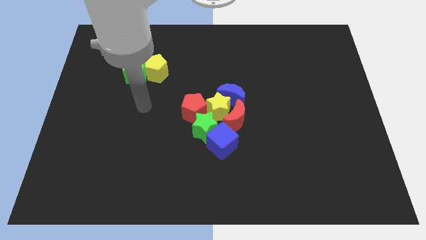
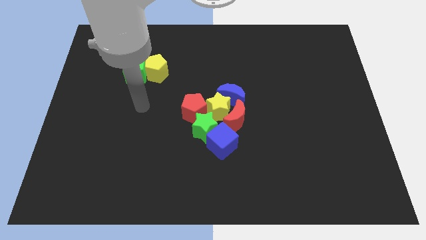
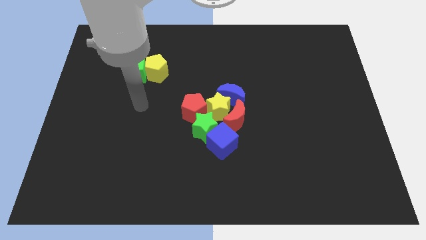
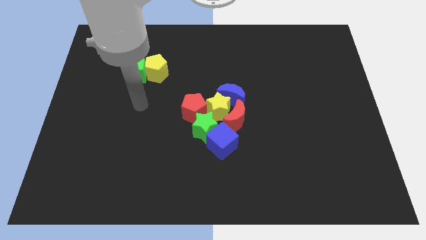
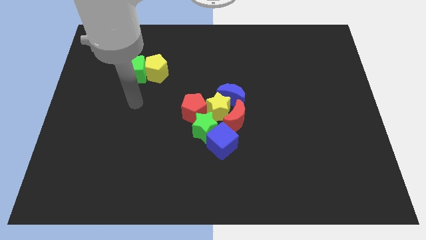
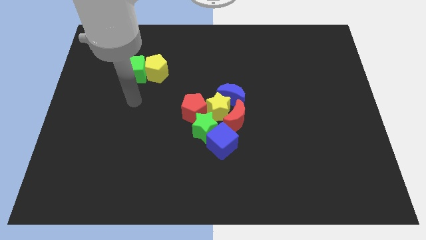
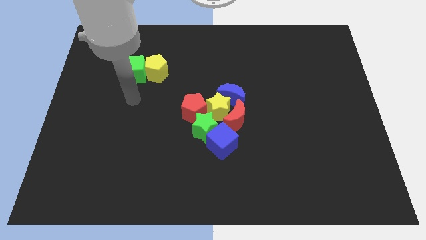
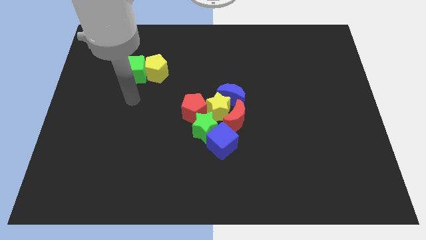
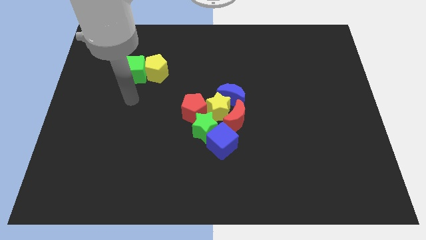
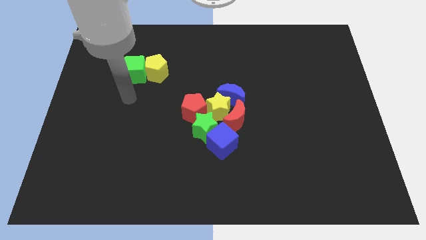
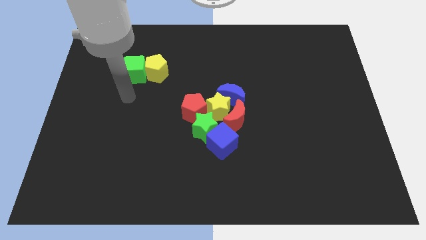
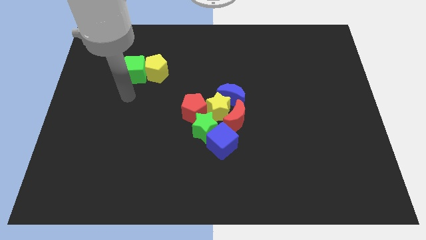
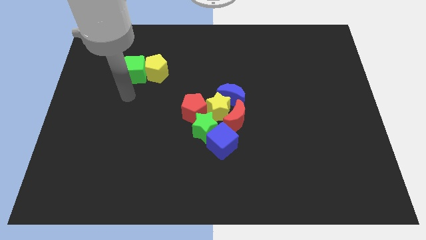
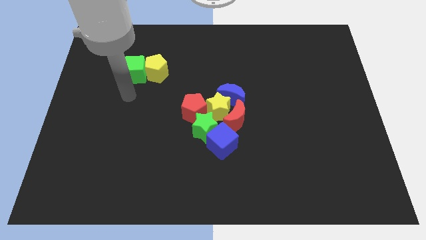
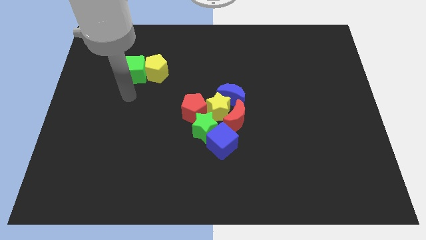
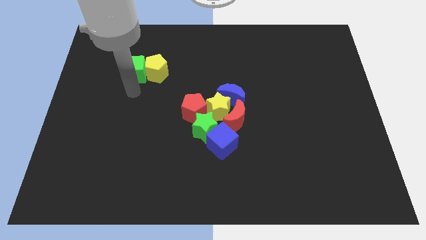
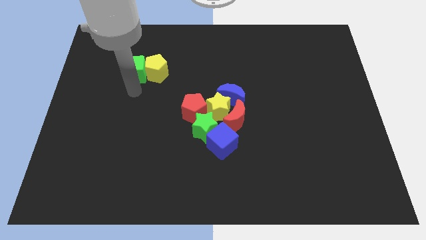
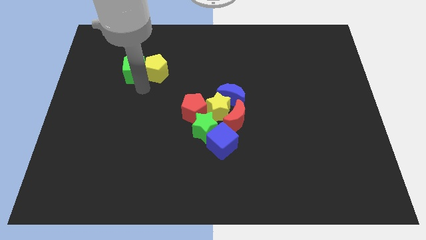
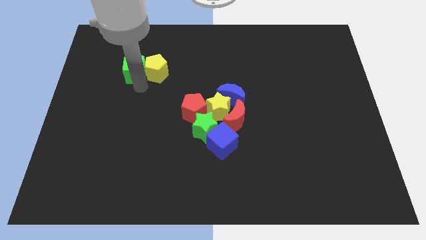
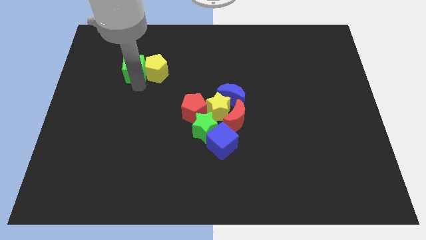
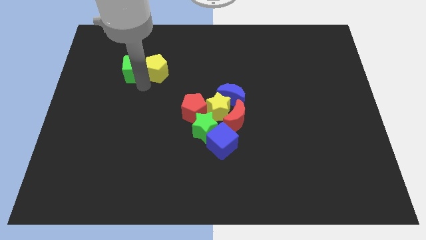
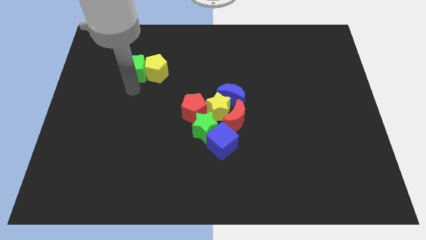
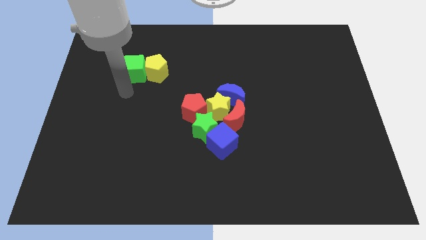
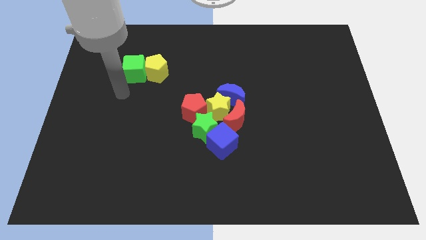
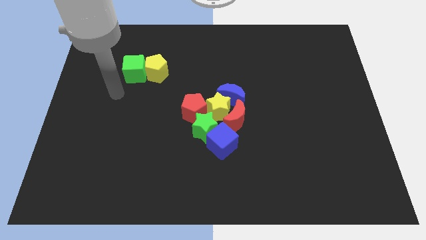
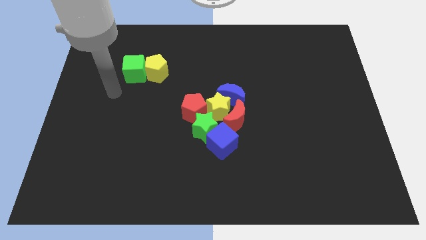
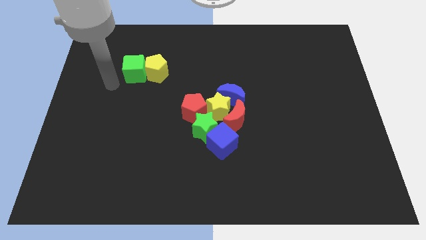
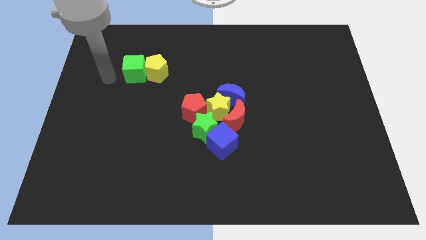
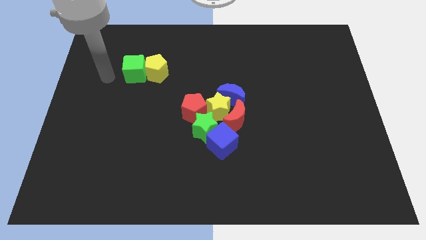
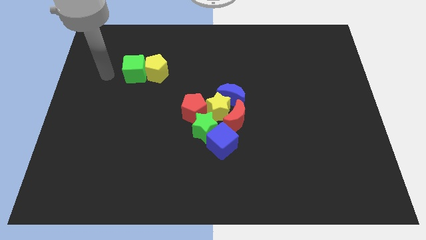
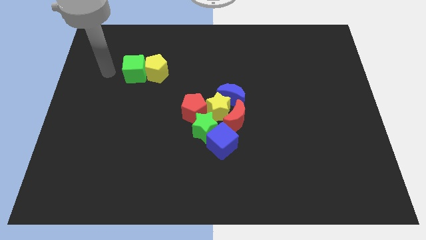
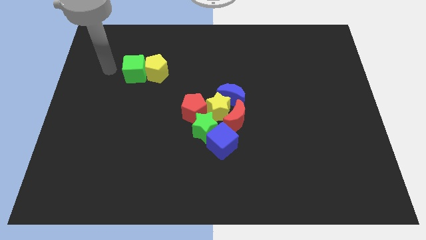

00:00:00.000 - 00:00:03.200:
move your arm and point to the left of green cube

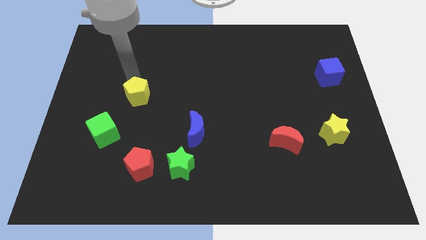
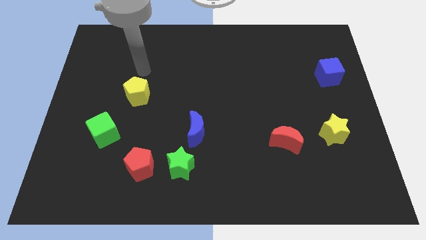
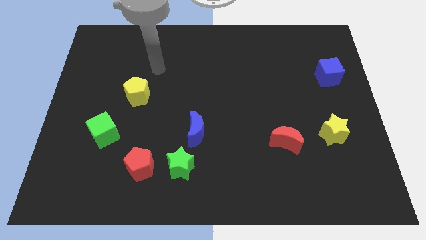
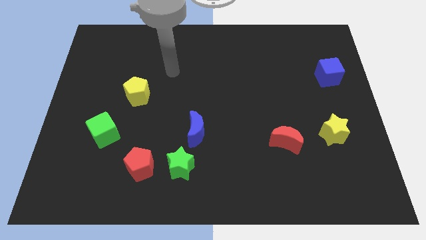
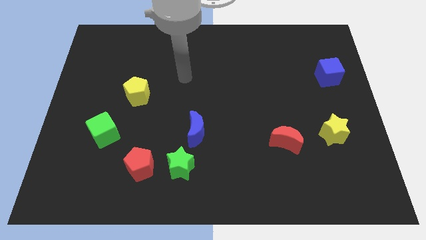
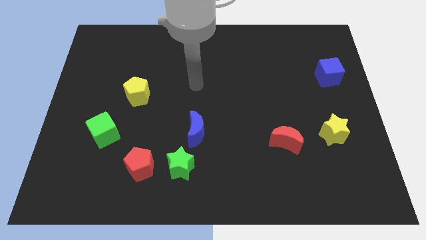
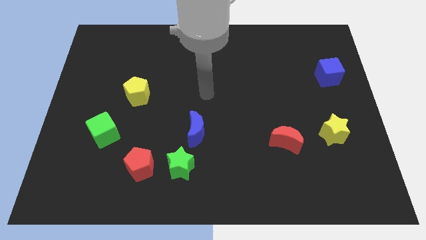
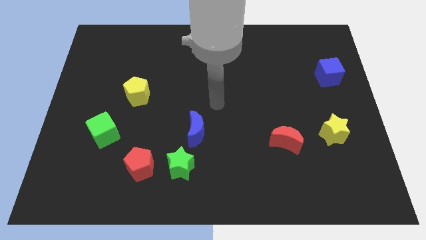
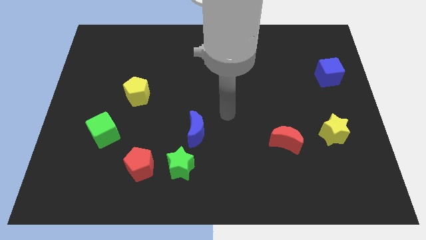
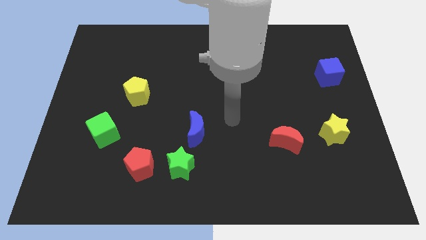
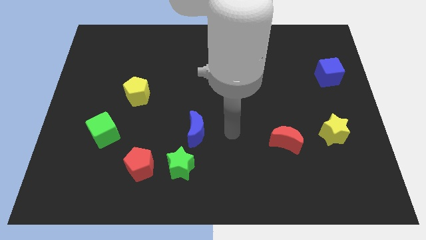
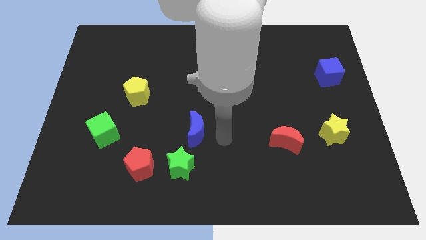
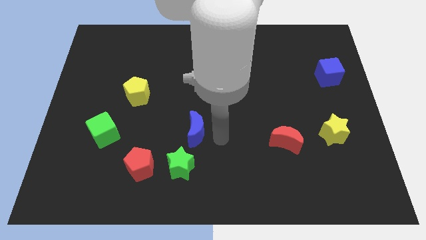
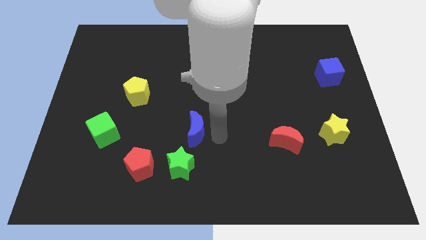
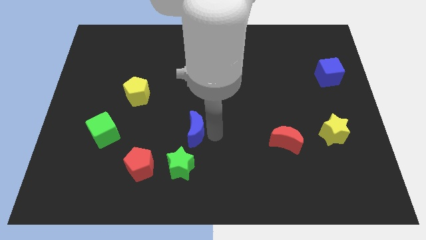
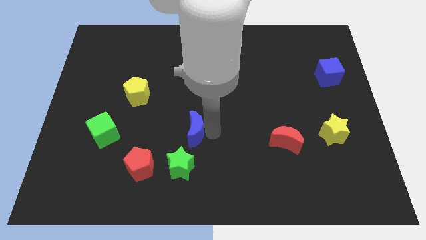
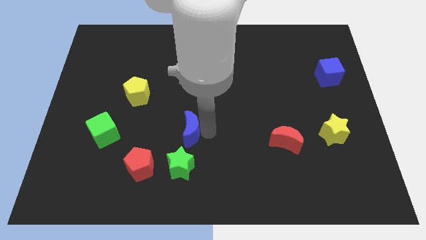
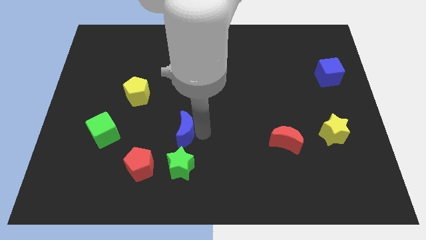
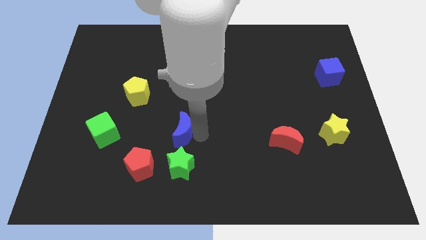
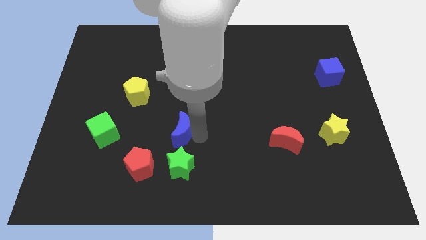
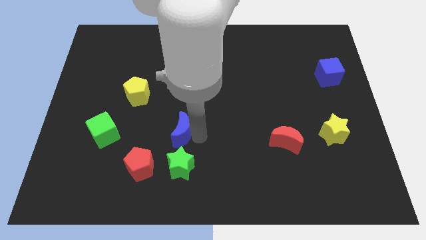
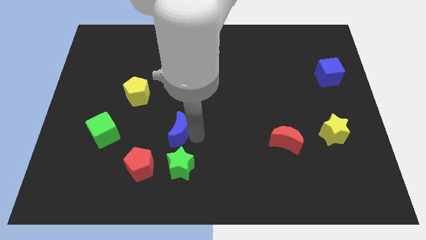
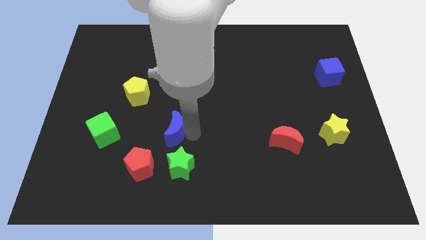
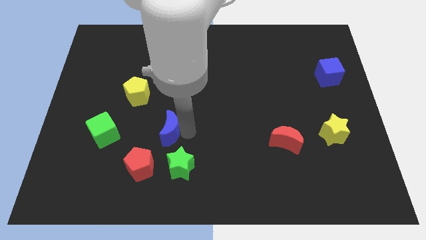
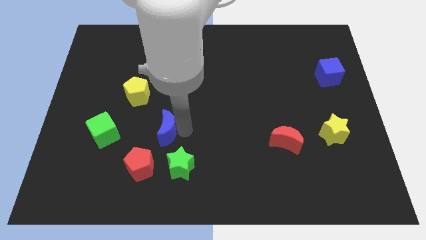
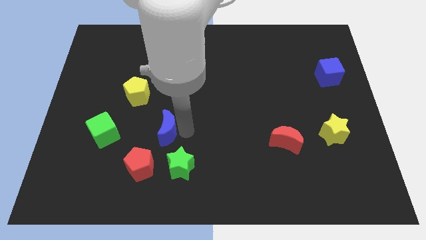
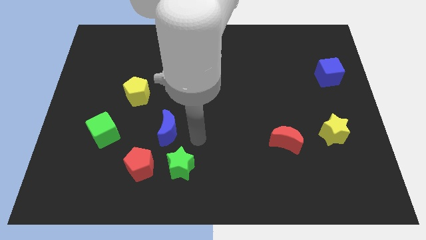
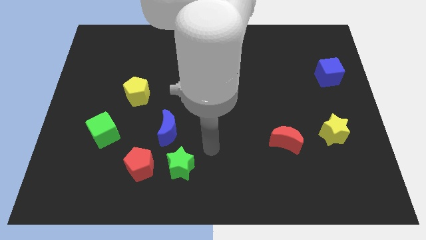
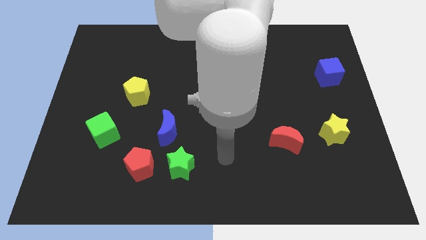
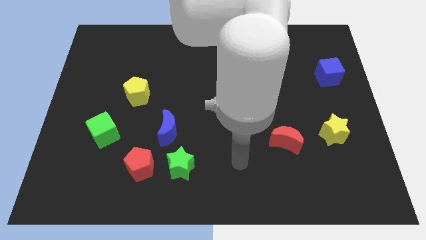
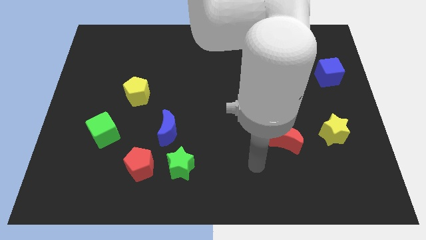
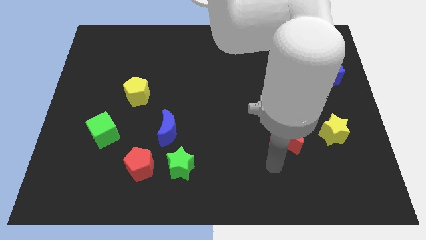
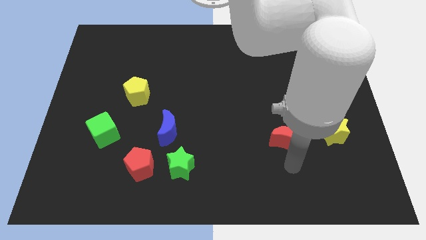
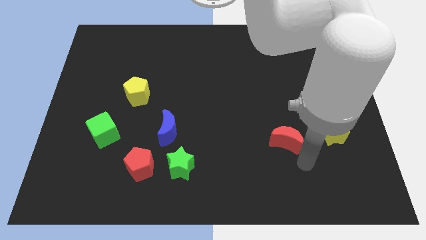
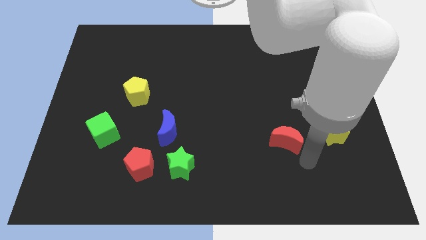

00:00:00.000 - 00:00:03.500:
move the blue crescent to the top of the green star

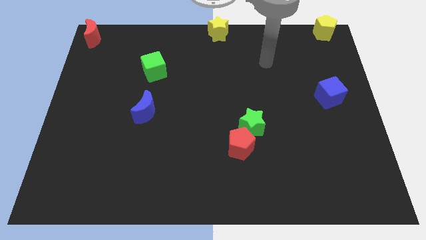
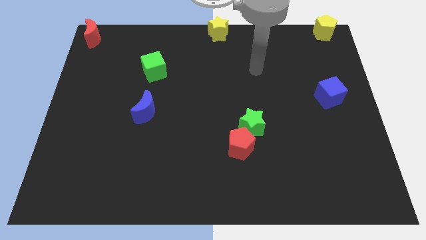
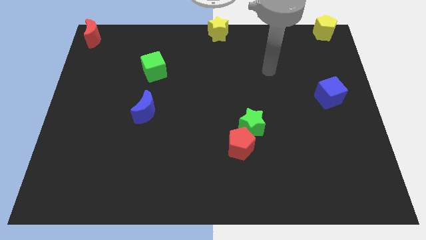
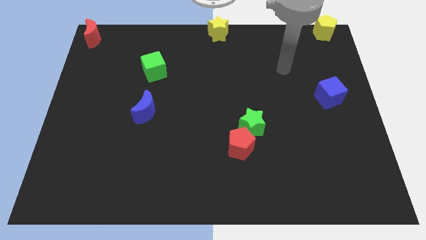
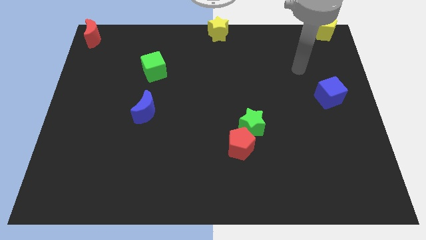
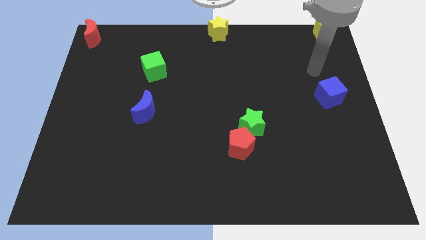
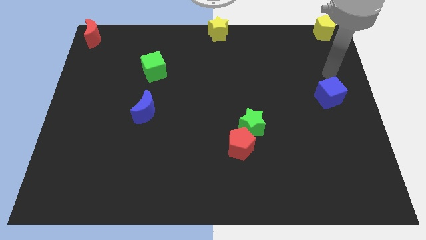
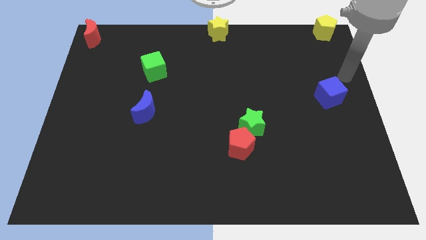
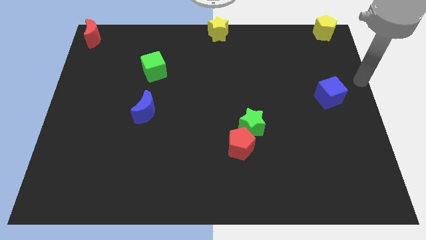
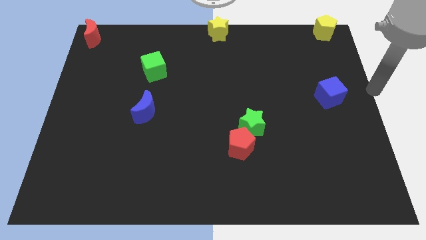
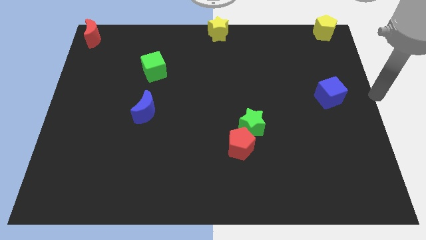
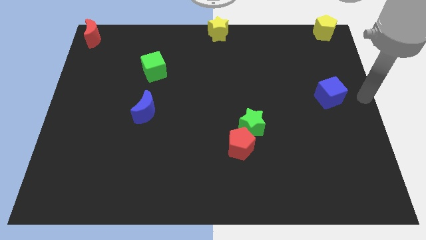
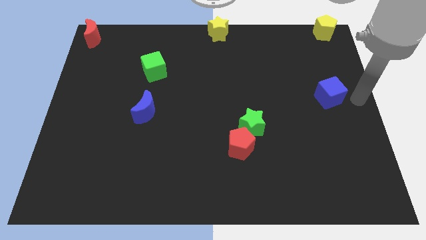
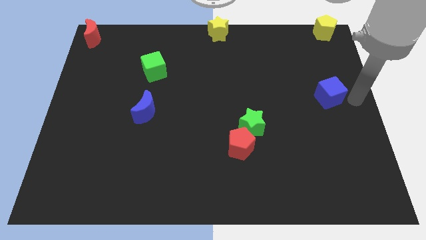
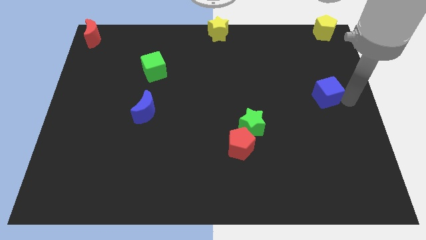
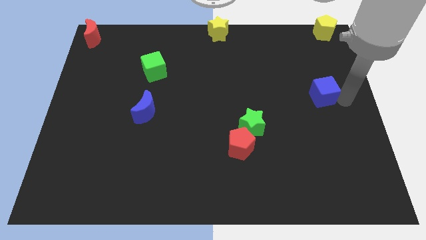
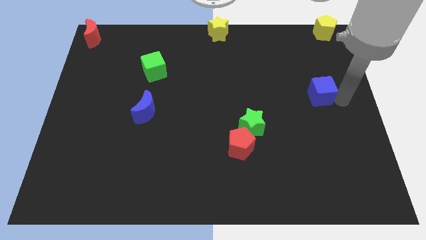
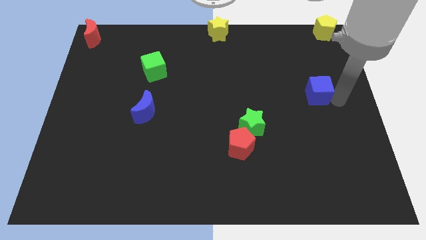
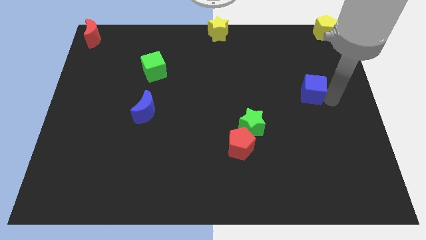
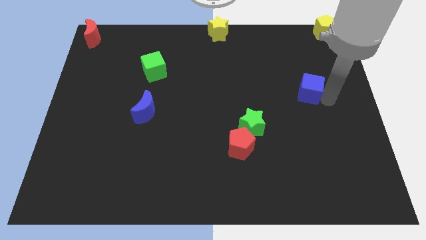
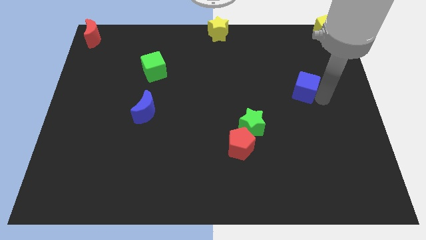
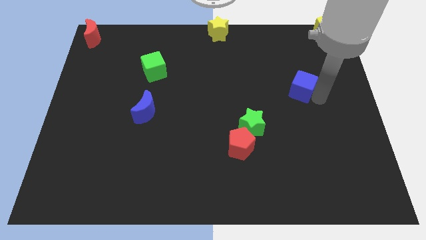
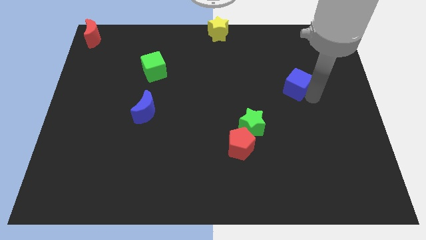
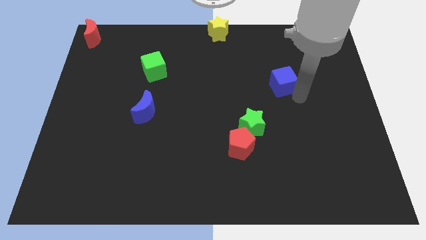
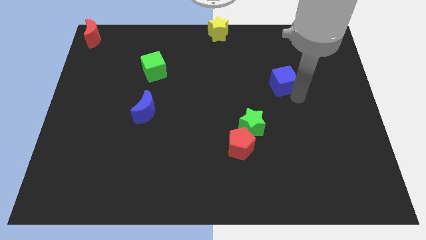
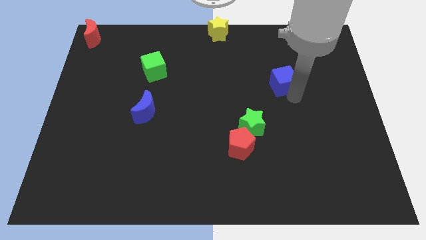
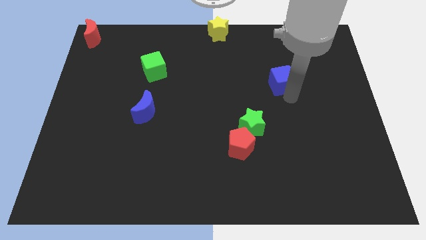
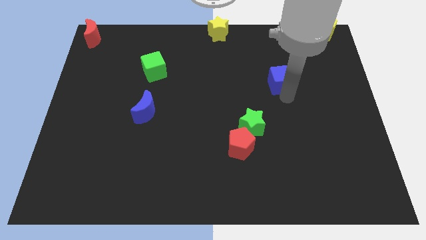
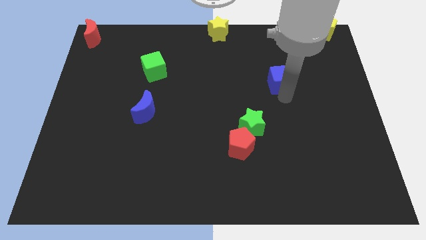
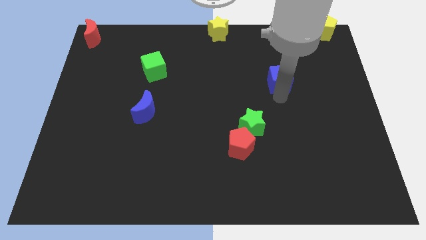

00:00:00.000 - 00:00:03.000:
move blue cube away from right center of the board
